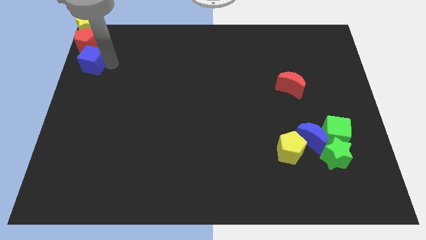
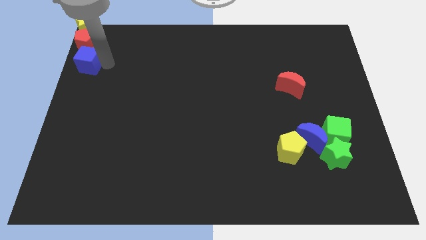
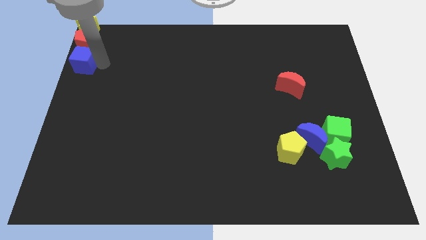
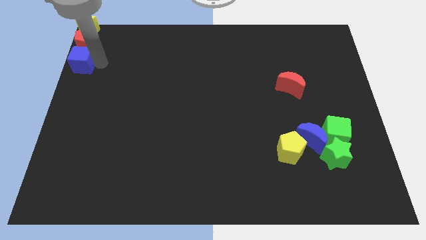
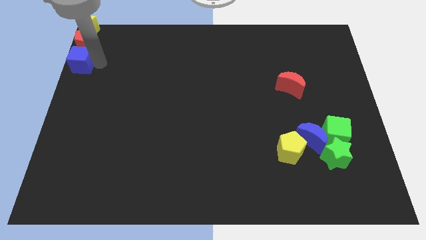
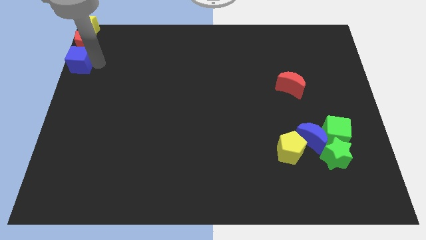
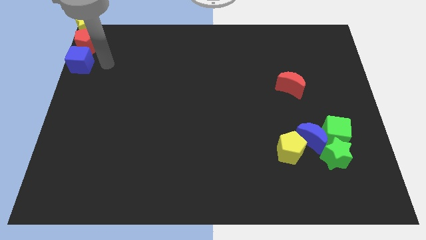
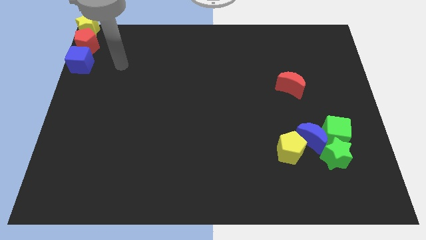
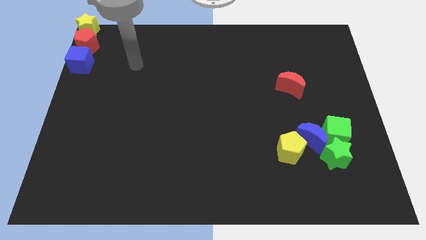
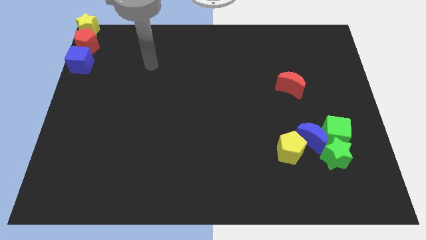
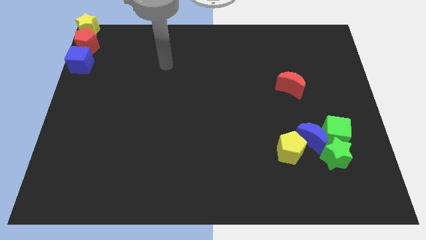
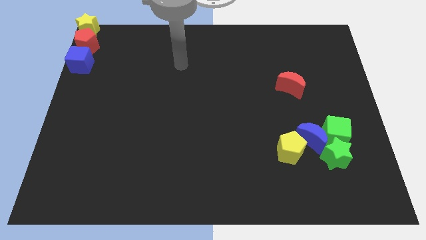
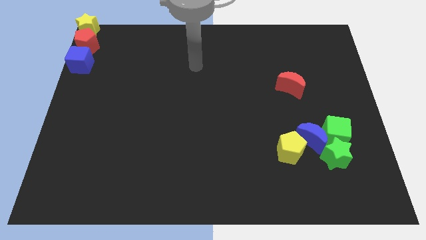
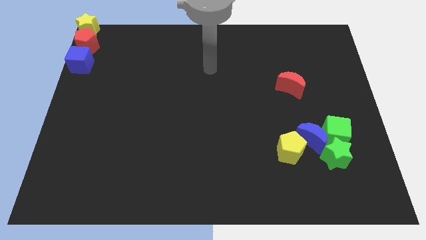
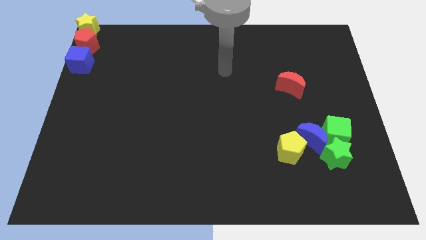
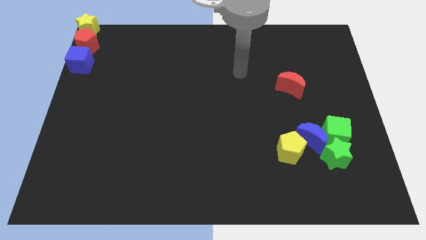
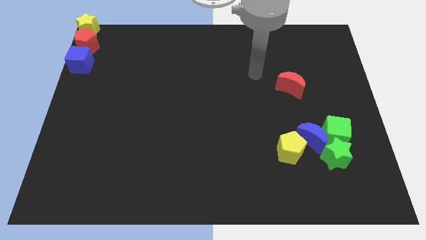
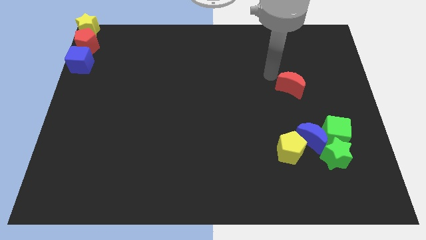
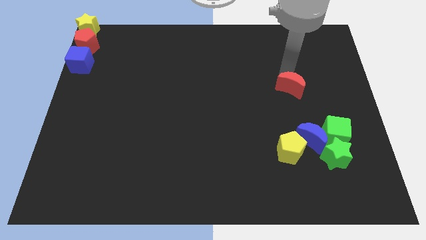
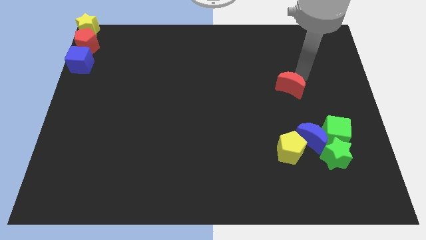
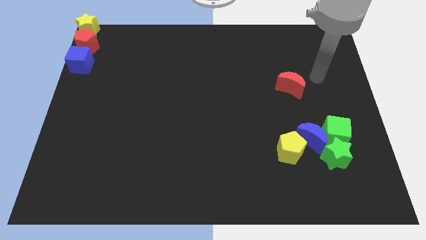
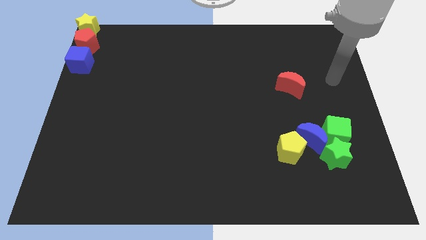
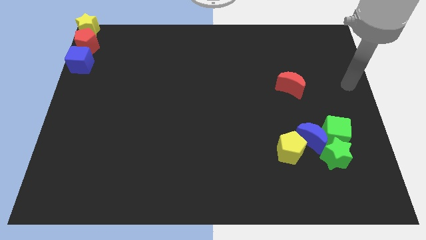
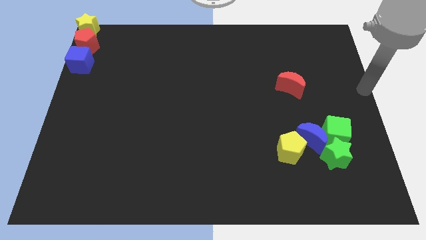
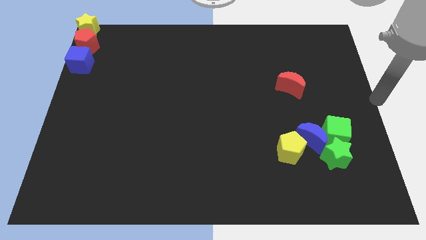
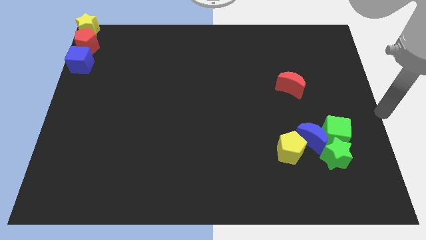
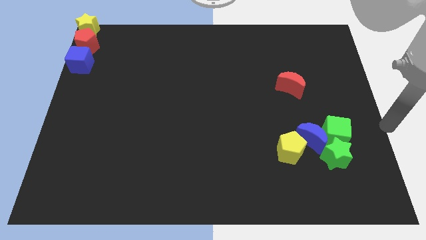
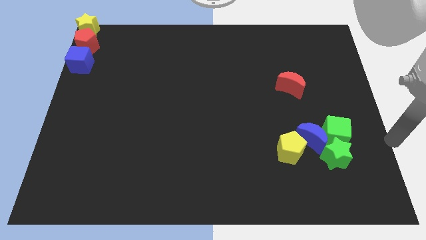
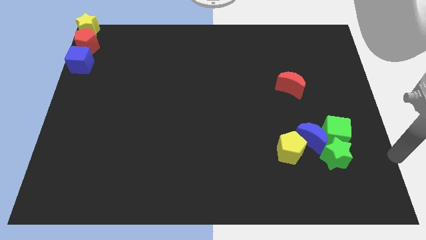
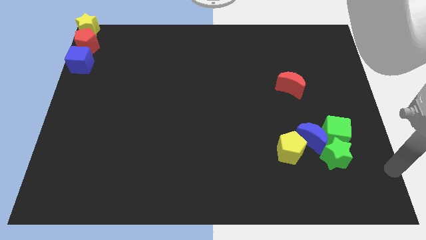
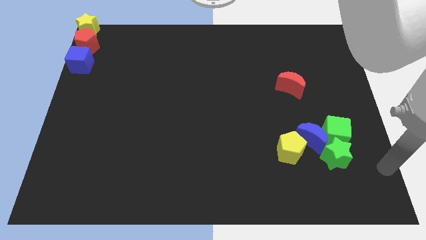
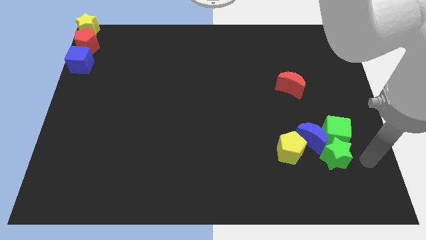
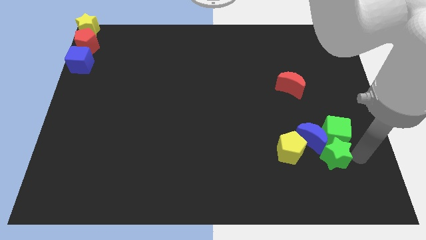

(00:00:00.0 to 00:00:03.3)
move the arm to the right of the green star

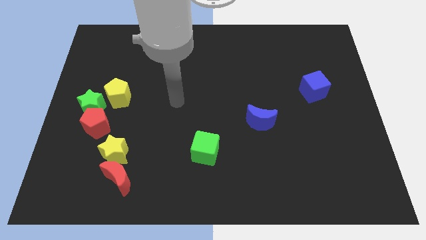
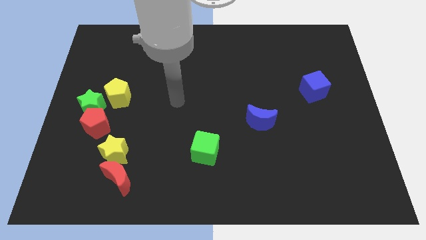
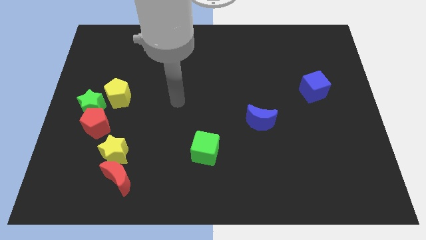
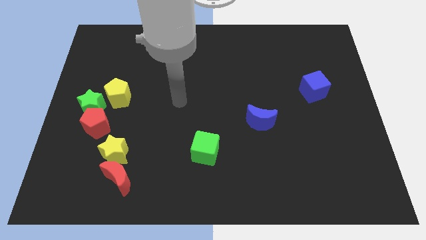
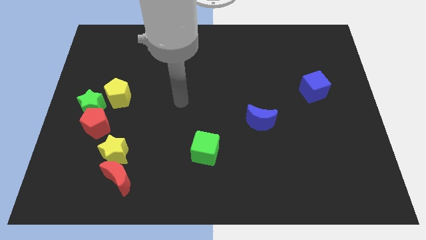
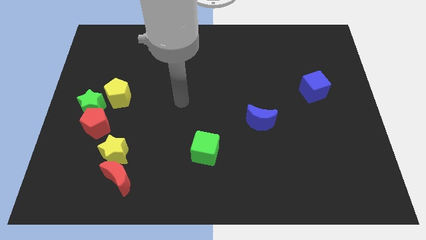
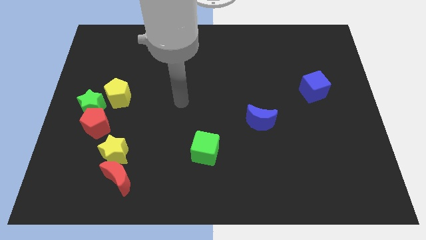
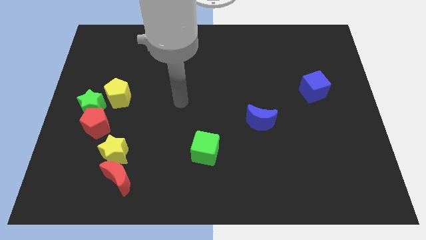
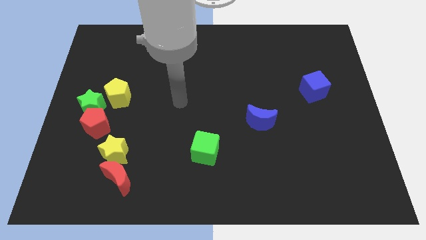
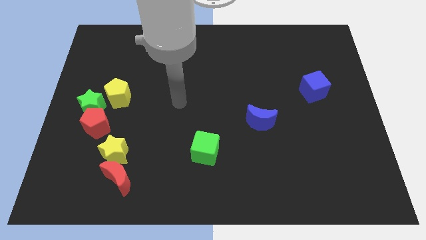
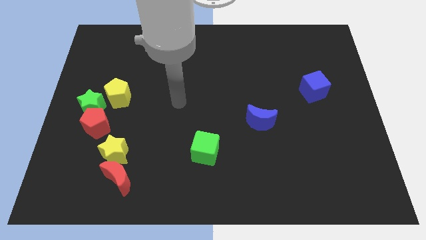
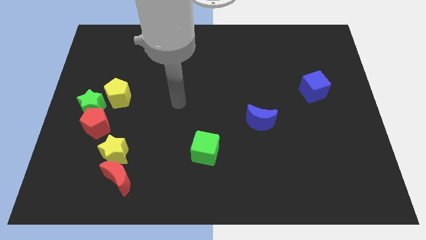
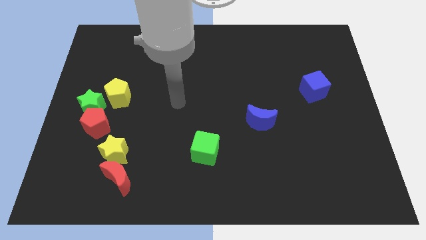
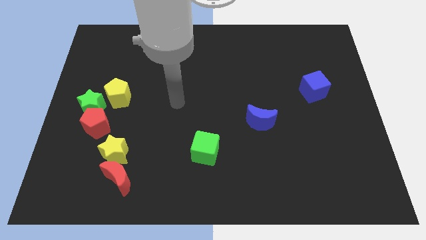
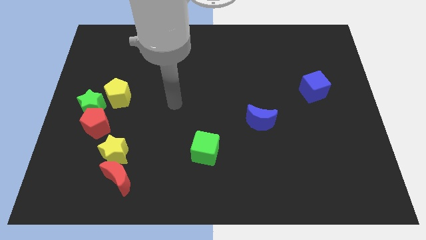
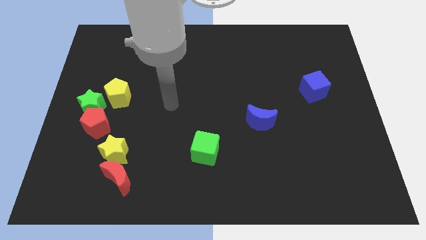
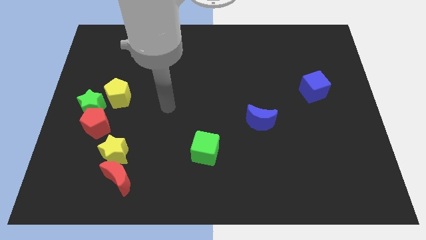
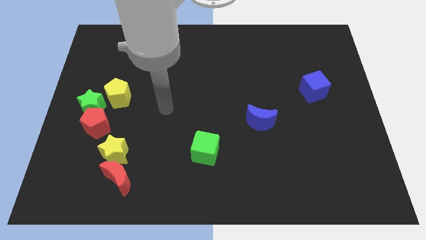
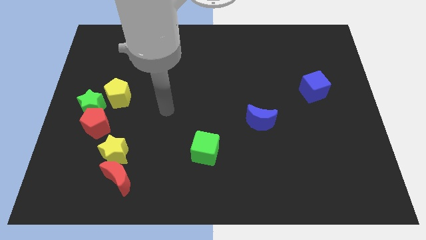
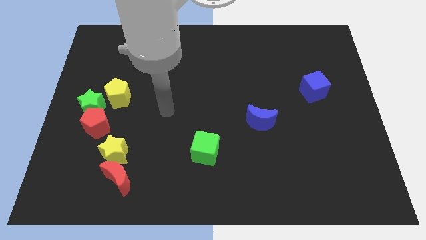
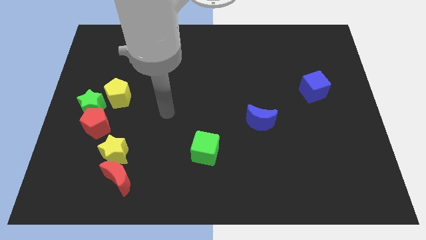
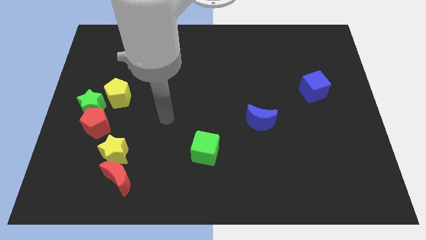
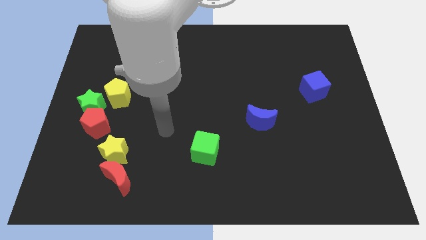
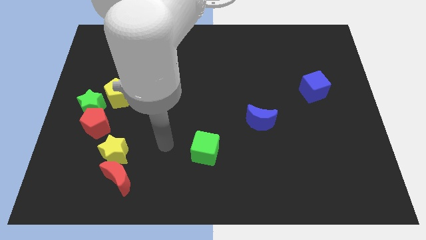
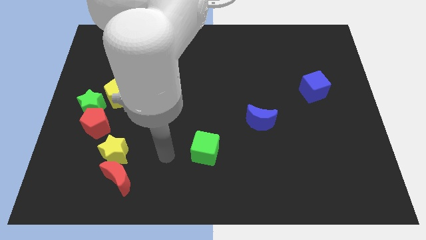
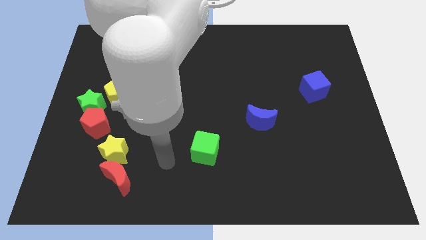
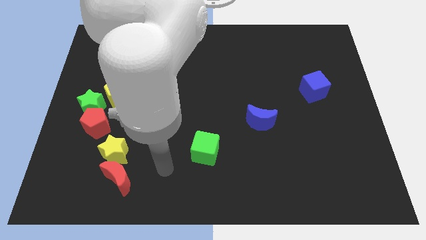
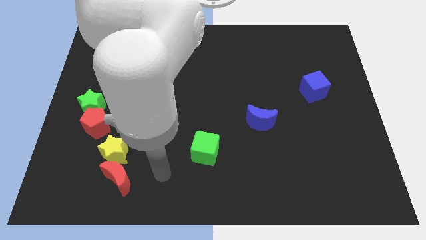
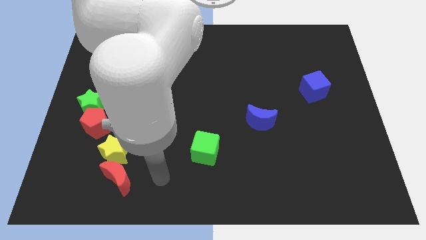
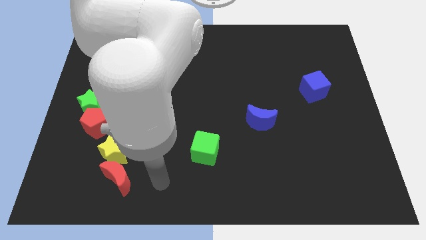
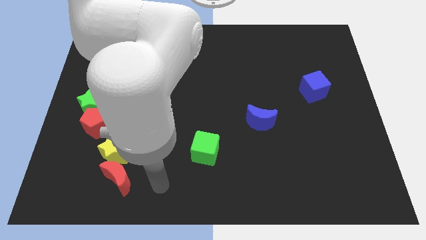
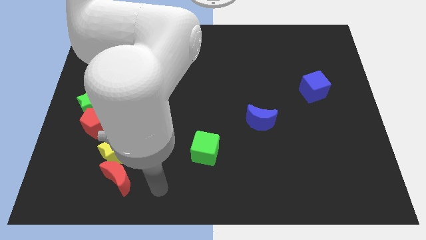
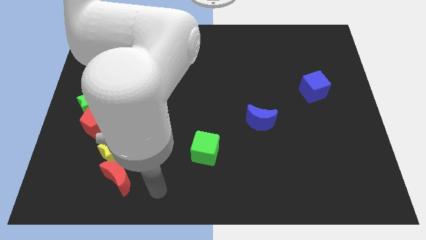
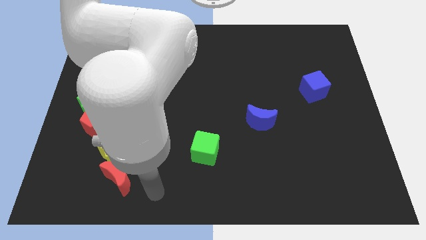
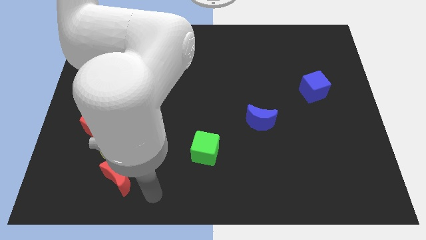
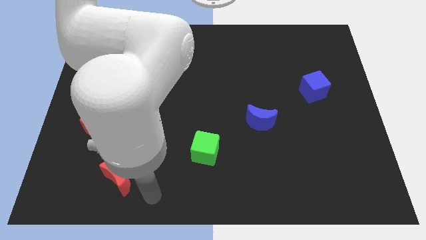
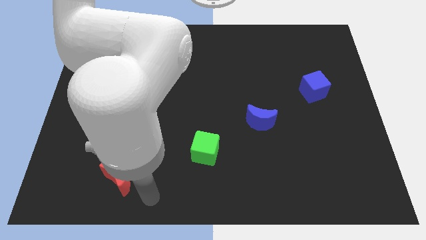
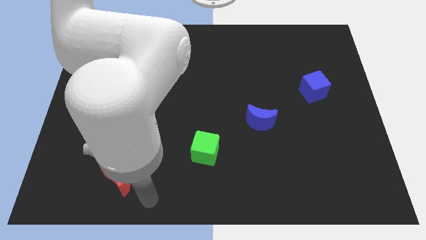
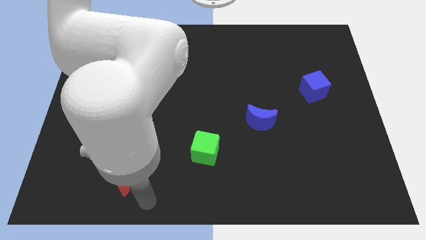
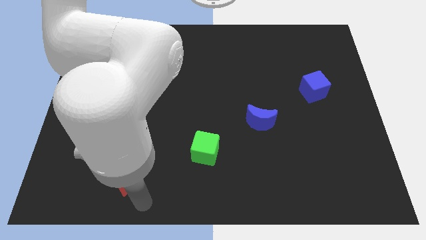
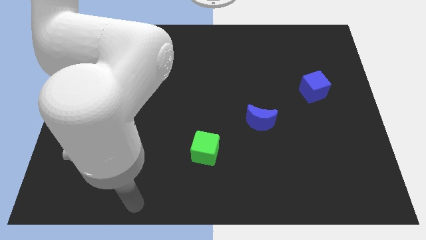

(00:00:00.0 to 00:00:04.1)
move your arm down and to the left

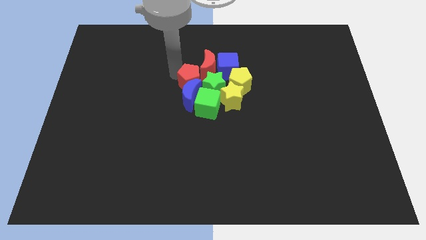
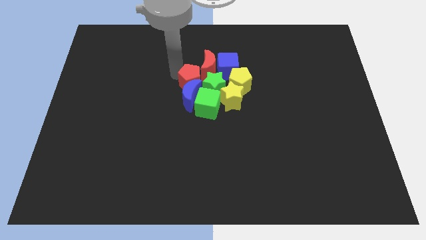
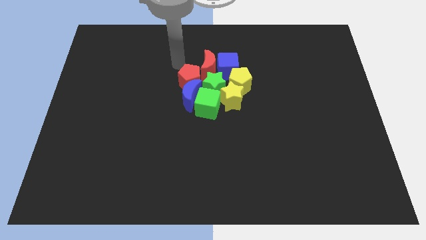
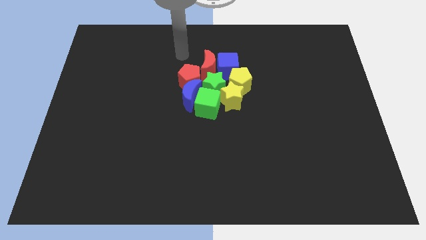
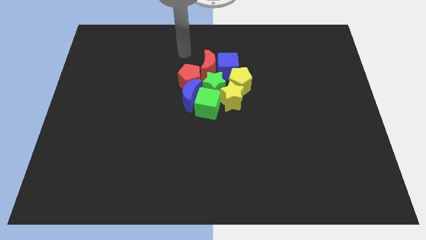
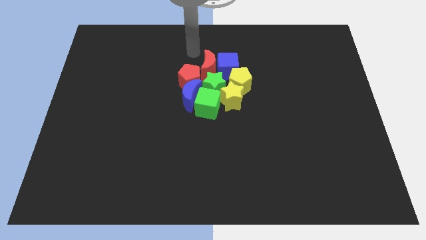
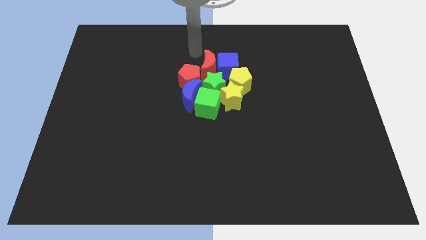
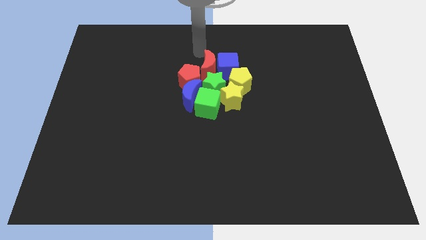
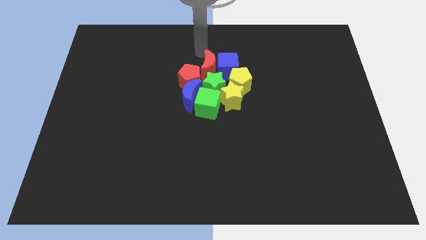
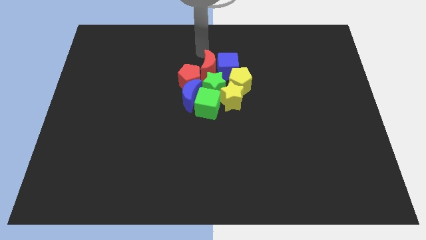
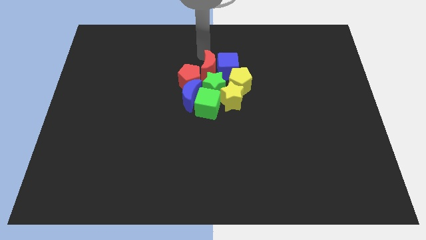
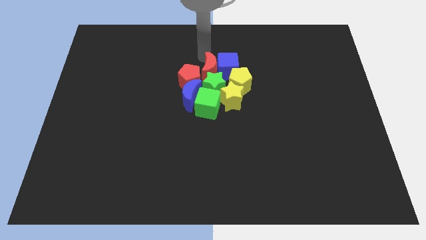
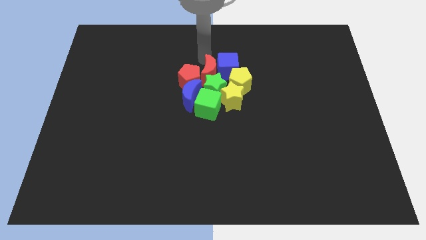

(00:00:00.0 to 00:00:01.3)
push the red crescent slightly into the green star

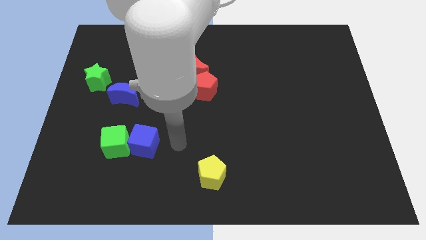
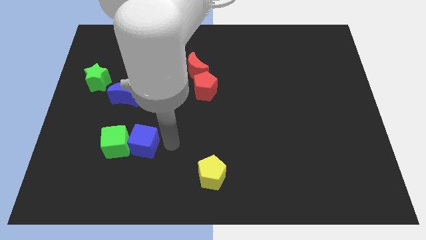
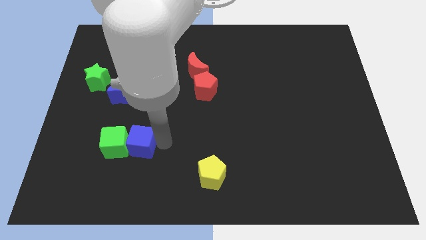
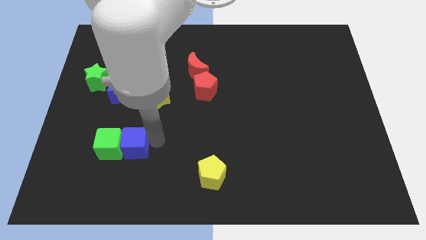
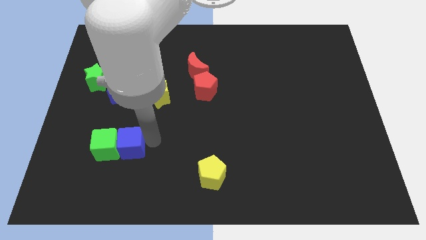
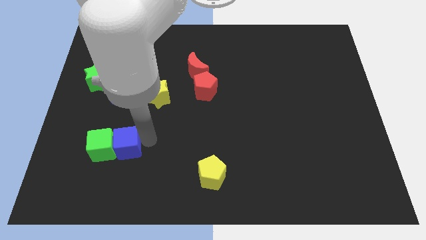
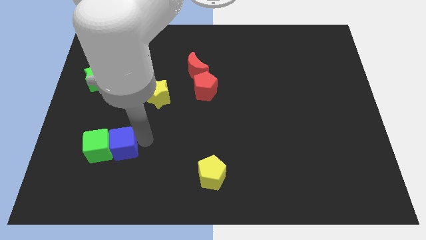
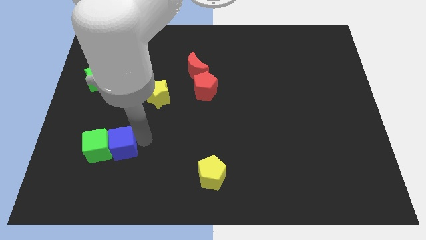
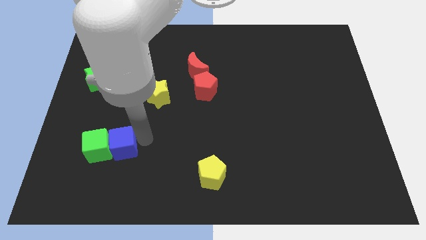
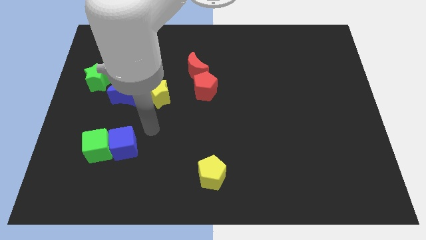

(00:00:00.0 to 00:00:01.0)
push the green cube towards the left side with the blue cube
